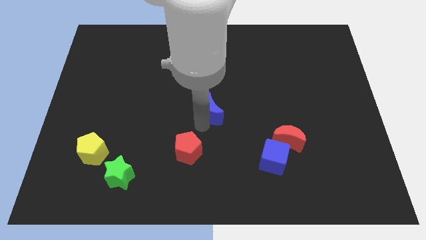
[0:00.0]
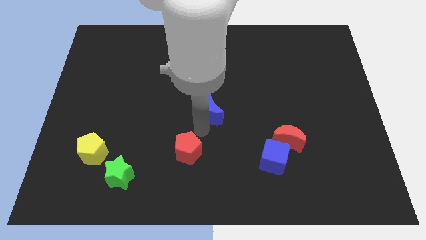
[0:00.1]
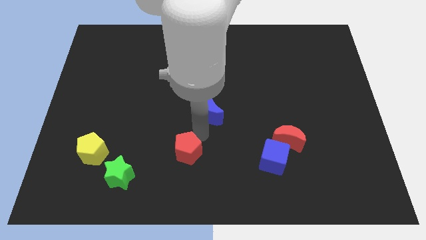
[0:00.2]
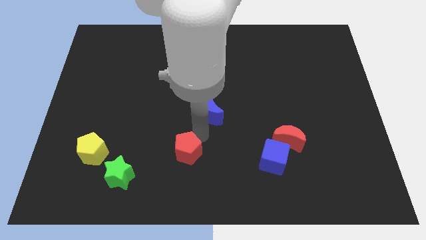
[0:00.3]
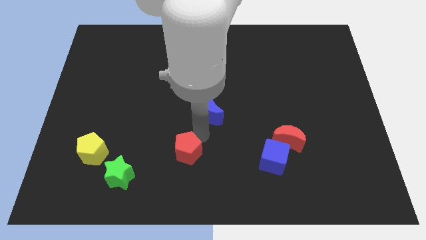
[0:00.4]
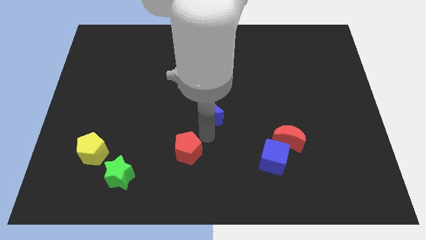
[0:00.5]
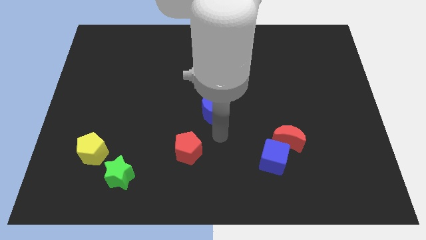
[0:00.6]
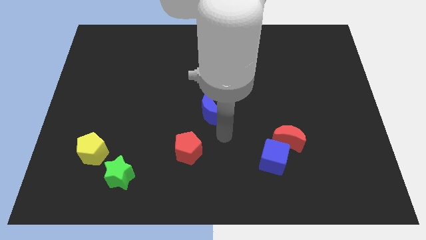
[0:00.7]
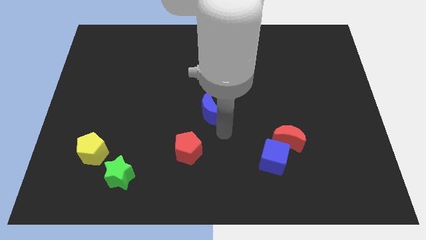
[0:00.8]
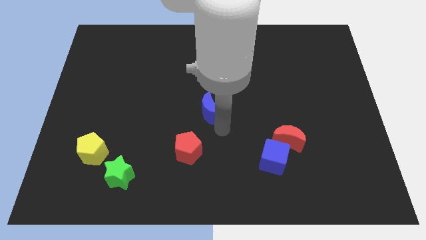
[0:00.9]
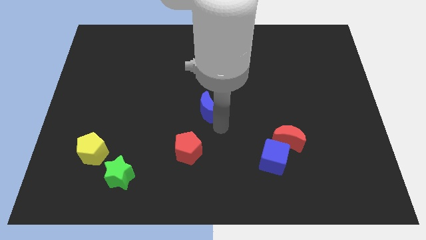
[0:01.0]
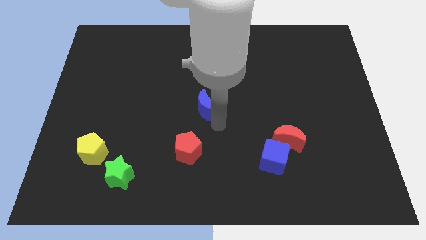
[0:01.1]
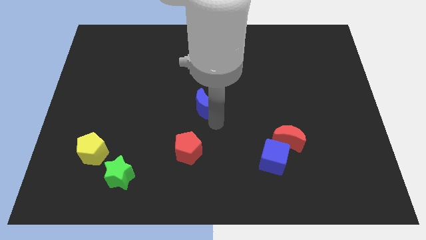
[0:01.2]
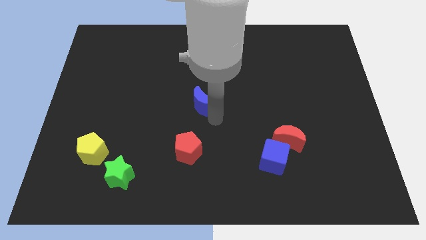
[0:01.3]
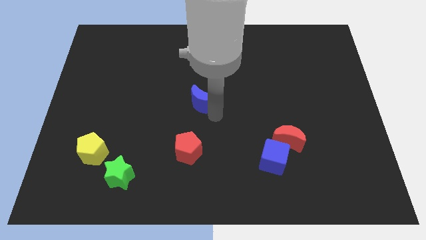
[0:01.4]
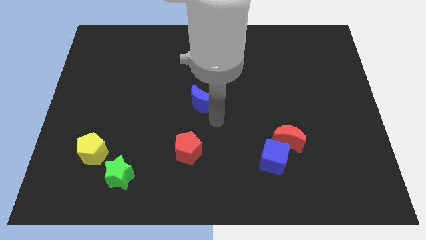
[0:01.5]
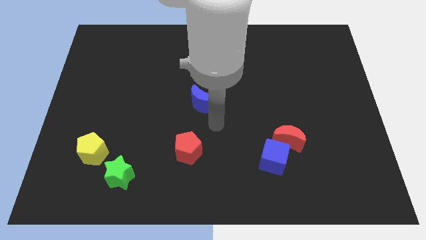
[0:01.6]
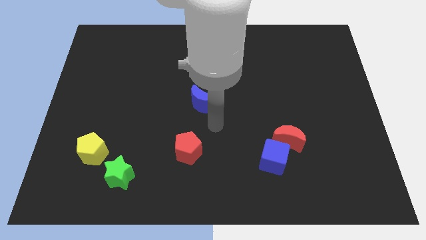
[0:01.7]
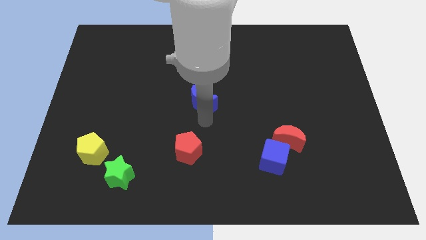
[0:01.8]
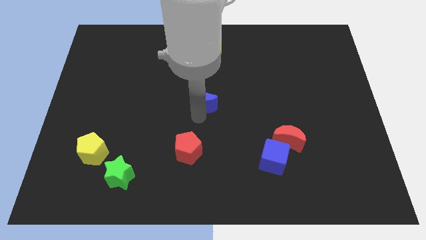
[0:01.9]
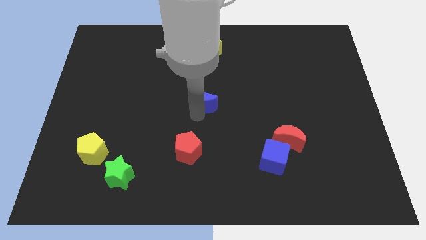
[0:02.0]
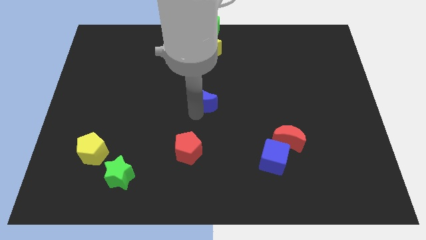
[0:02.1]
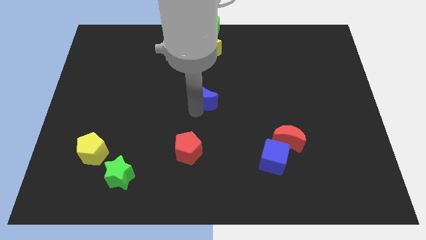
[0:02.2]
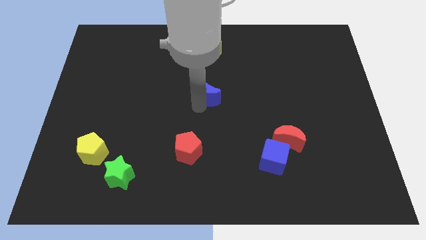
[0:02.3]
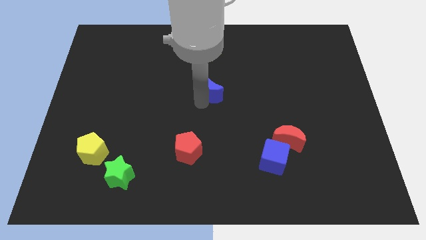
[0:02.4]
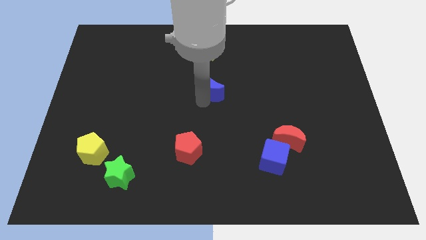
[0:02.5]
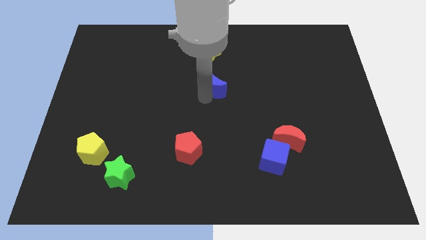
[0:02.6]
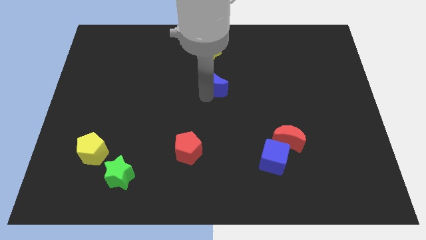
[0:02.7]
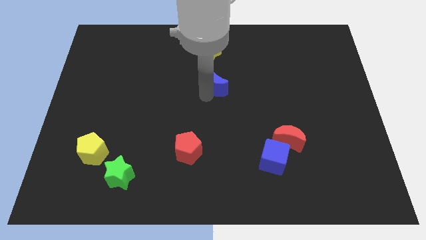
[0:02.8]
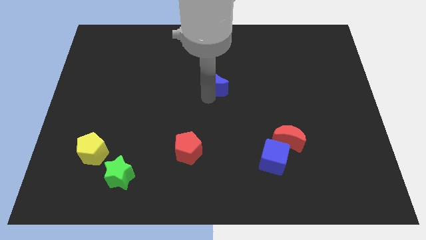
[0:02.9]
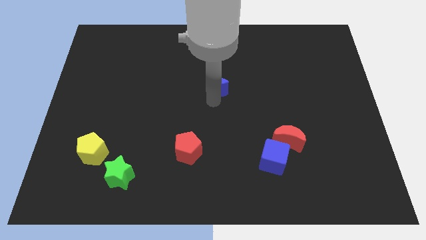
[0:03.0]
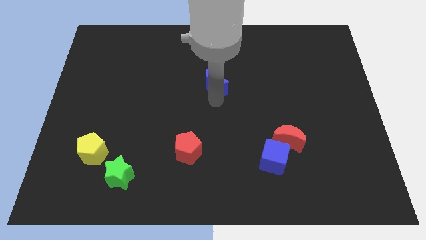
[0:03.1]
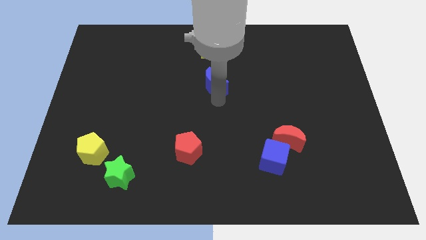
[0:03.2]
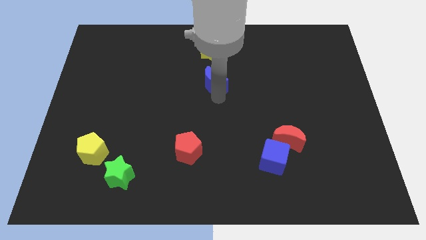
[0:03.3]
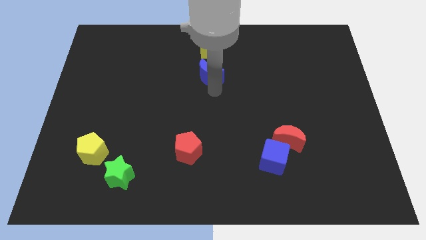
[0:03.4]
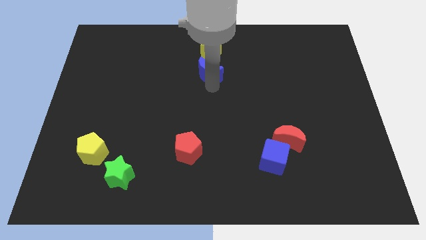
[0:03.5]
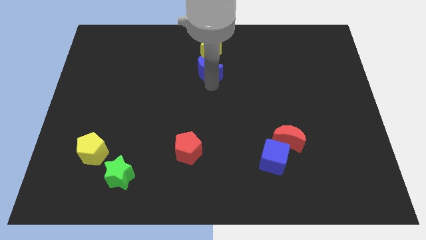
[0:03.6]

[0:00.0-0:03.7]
push the blue moon towards the top center of the board

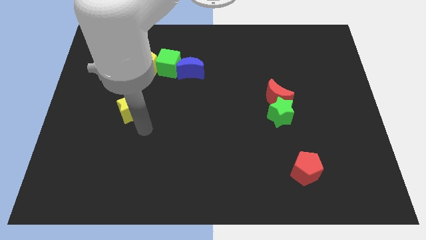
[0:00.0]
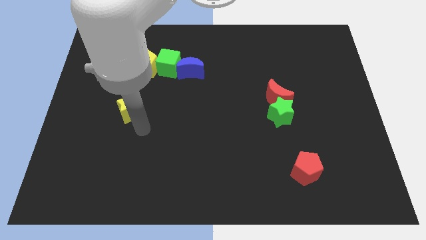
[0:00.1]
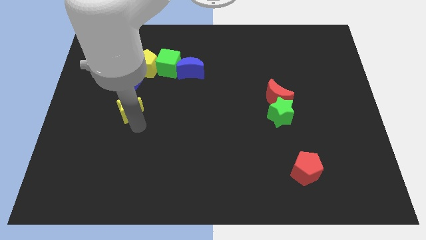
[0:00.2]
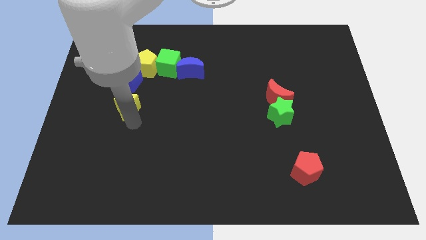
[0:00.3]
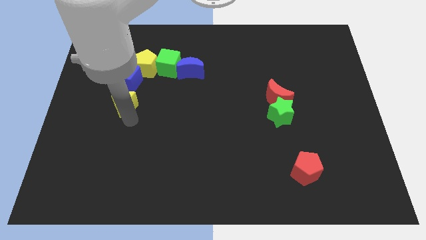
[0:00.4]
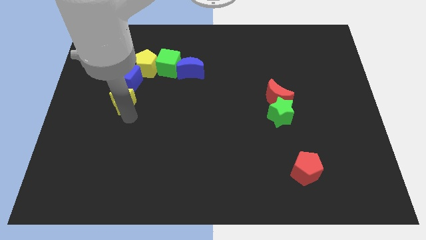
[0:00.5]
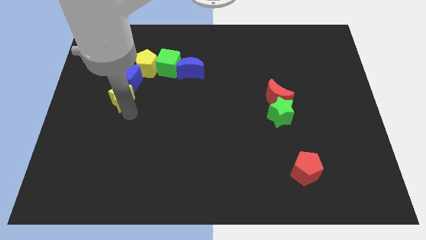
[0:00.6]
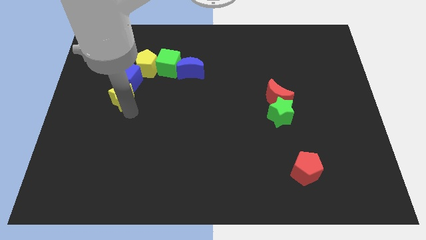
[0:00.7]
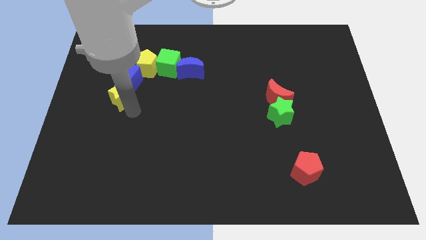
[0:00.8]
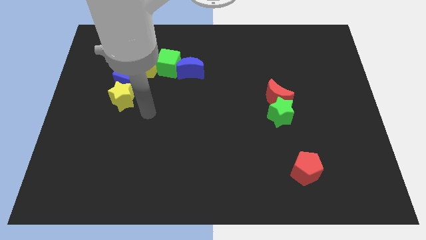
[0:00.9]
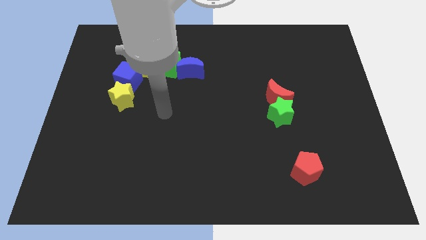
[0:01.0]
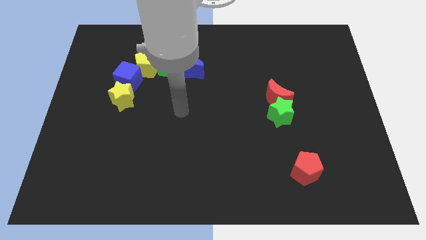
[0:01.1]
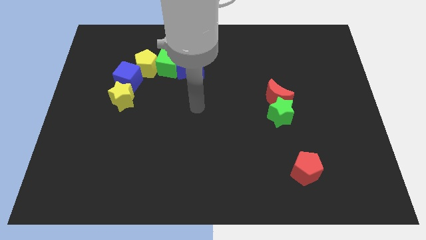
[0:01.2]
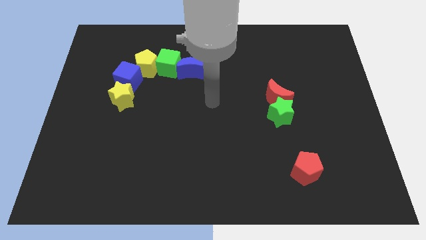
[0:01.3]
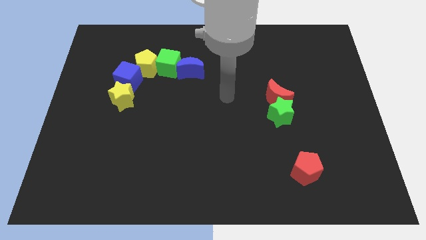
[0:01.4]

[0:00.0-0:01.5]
place the yellow star below the blue cube

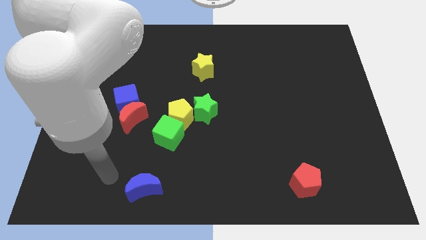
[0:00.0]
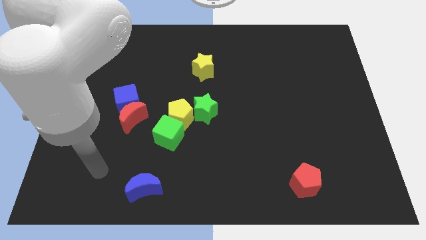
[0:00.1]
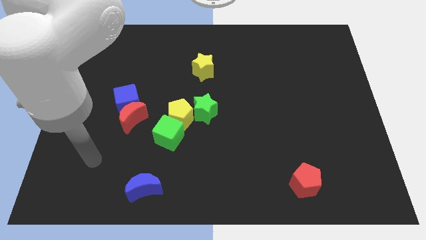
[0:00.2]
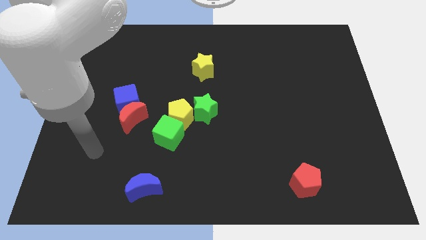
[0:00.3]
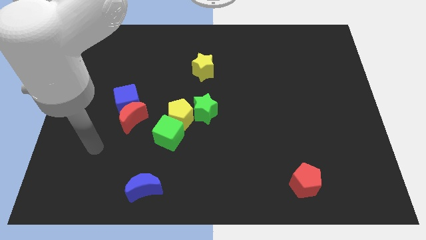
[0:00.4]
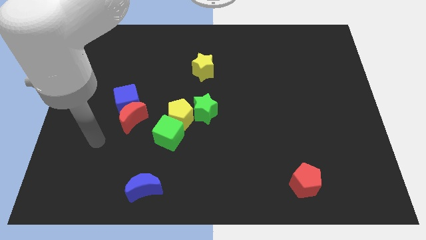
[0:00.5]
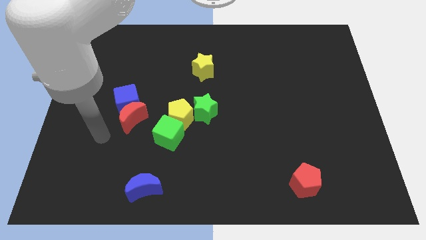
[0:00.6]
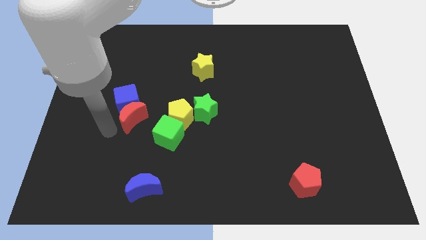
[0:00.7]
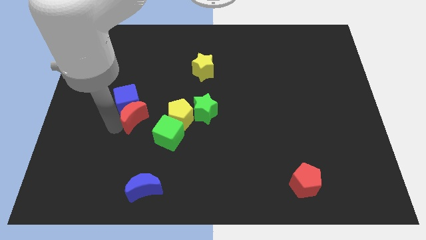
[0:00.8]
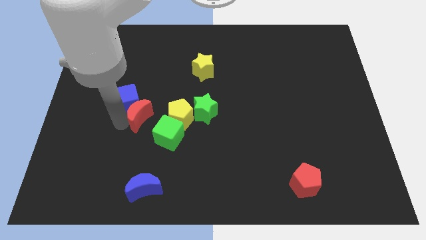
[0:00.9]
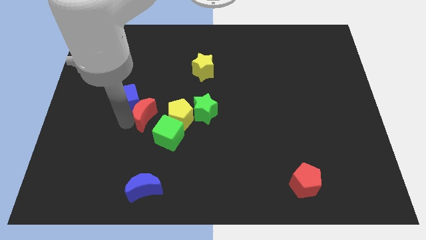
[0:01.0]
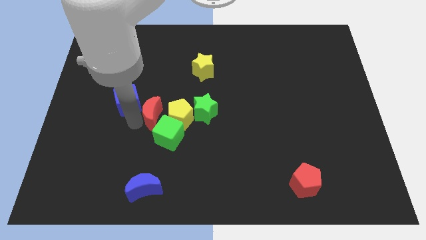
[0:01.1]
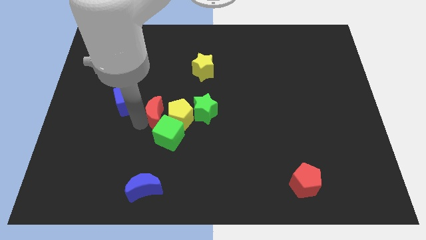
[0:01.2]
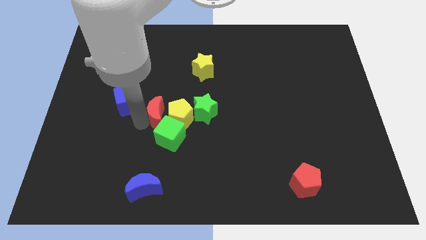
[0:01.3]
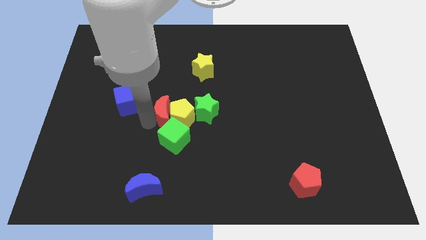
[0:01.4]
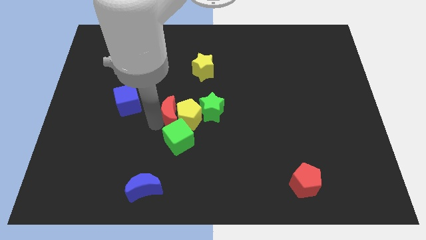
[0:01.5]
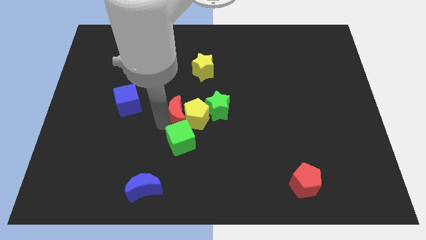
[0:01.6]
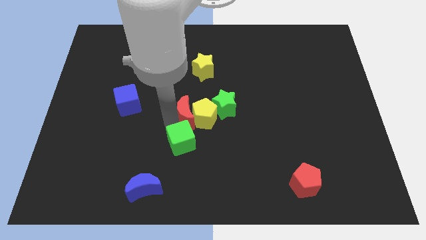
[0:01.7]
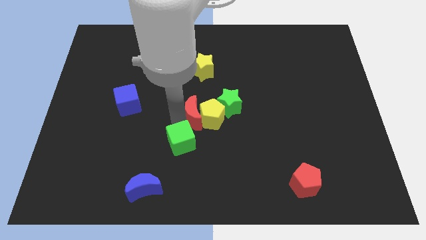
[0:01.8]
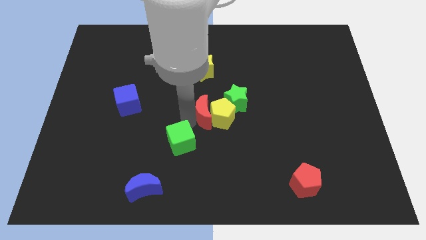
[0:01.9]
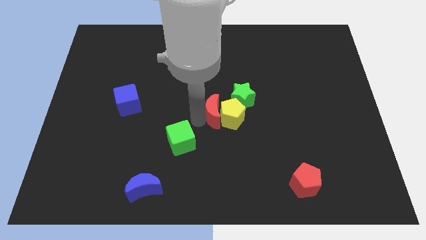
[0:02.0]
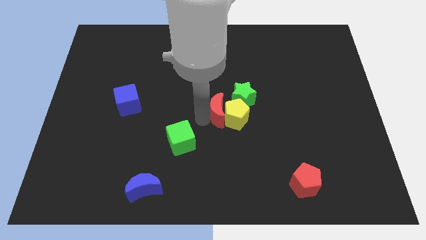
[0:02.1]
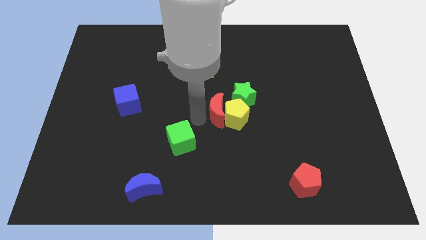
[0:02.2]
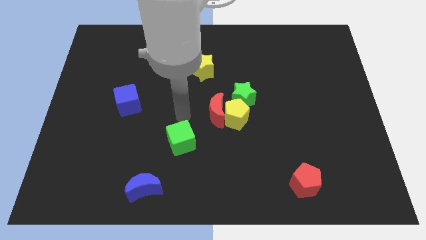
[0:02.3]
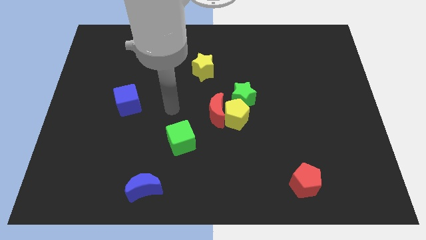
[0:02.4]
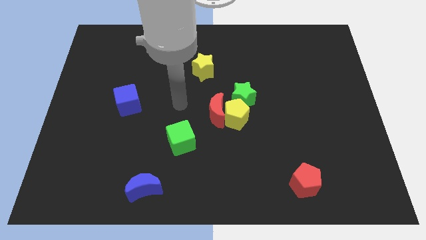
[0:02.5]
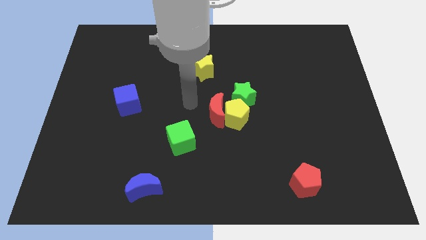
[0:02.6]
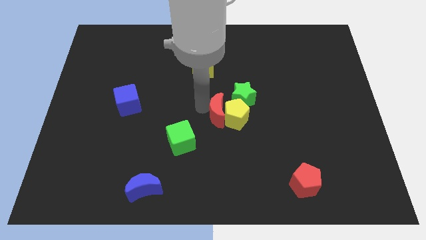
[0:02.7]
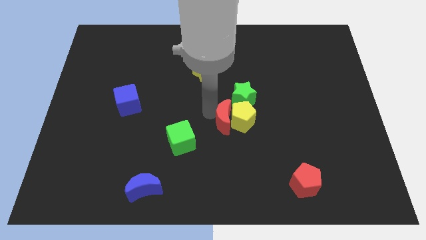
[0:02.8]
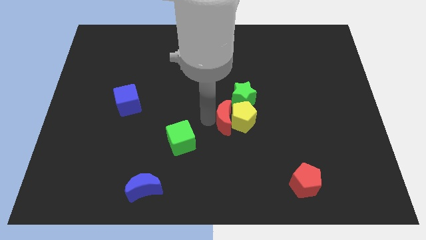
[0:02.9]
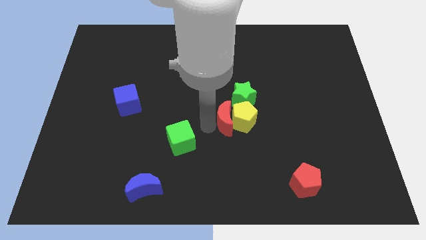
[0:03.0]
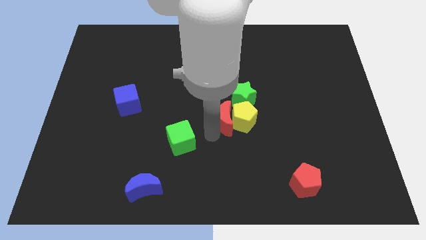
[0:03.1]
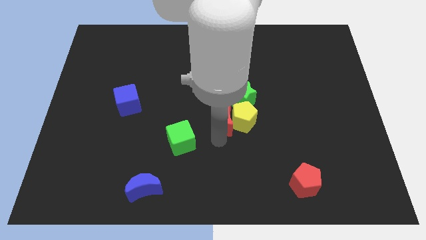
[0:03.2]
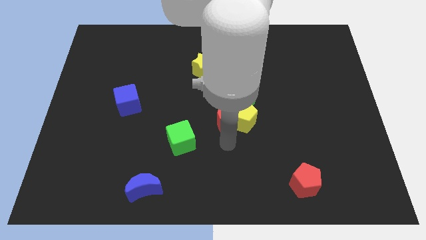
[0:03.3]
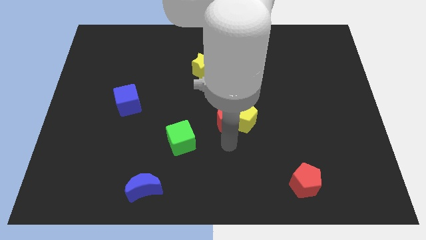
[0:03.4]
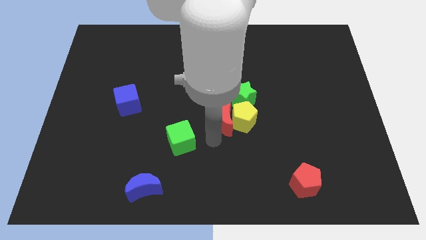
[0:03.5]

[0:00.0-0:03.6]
push the red crescent along with the yellow pentagon and the green star to the top right of the green cube
